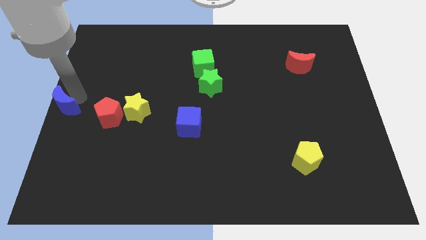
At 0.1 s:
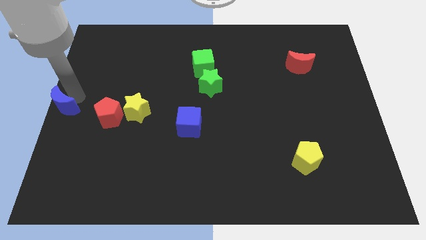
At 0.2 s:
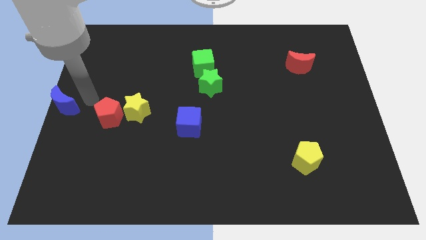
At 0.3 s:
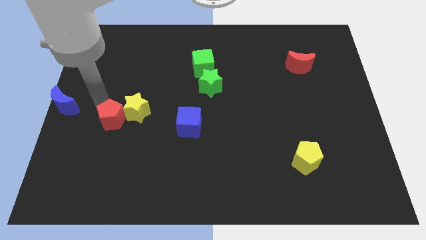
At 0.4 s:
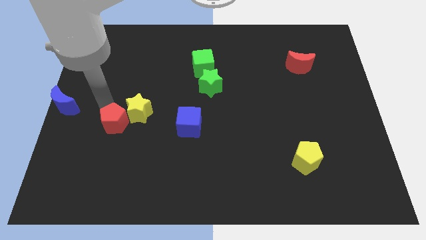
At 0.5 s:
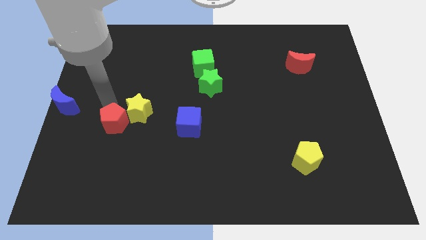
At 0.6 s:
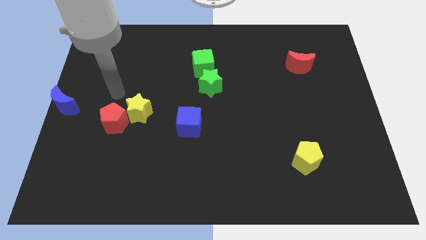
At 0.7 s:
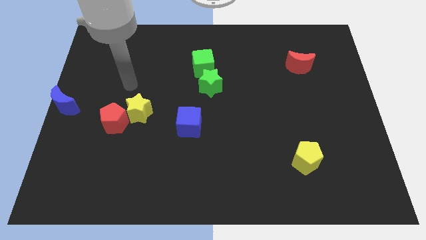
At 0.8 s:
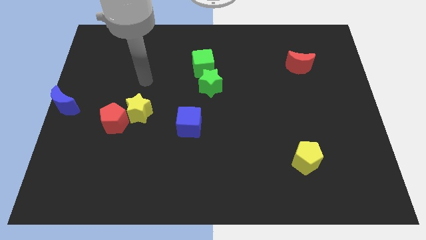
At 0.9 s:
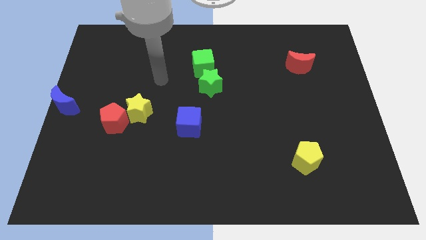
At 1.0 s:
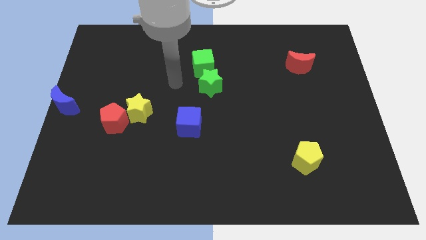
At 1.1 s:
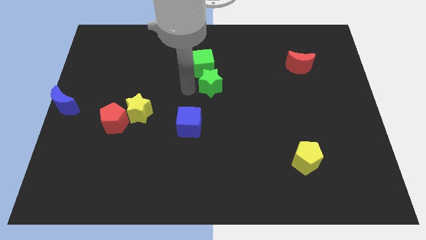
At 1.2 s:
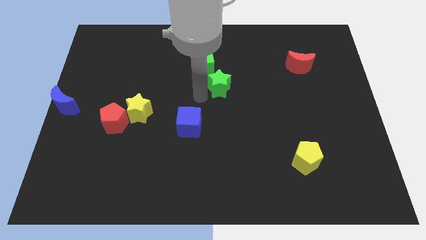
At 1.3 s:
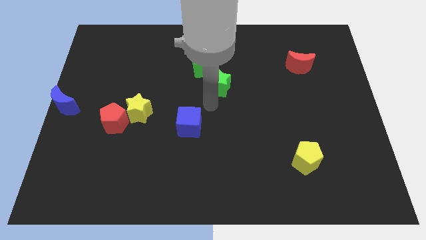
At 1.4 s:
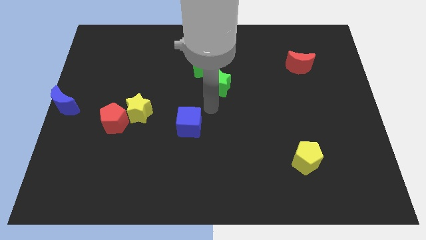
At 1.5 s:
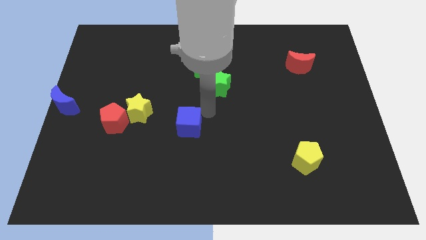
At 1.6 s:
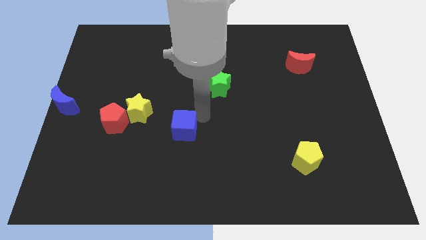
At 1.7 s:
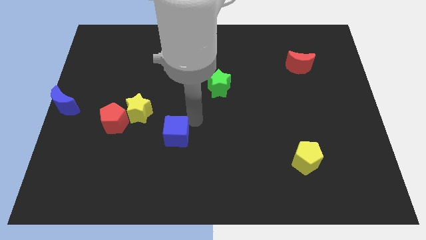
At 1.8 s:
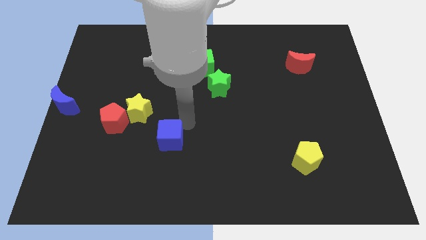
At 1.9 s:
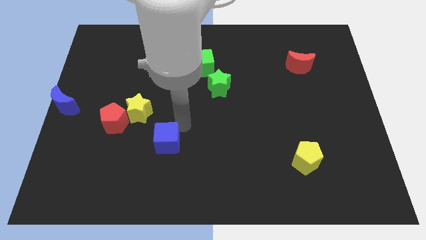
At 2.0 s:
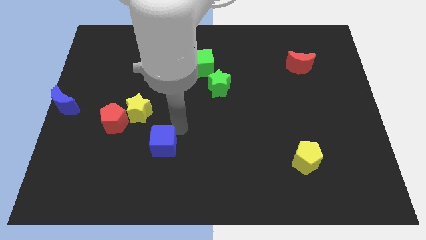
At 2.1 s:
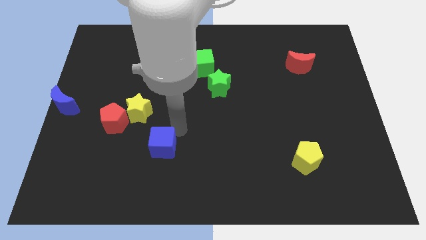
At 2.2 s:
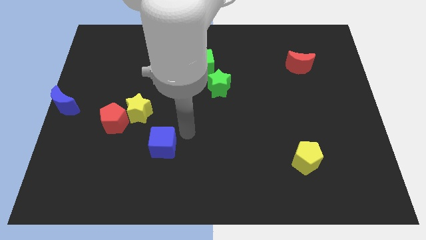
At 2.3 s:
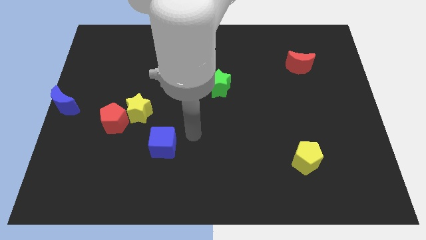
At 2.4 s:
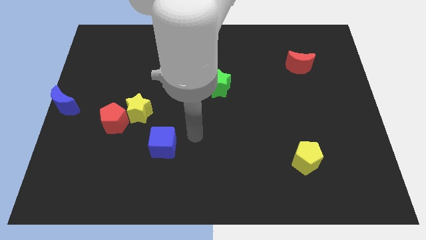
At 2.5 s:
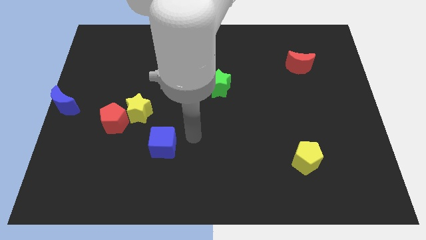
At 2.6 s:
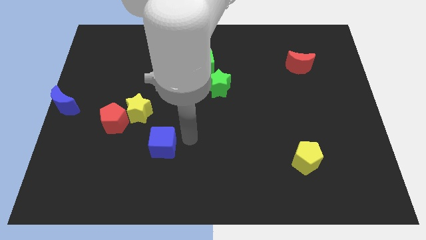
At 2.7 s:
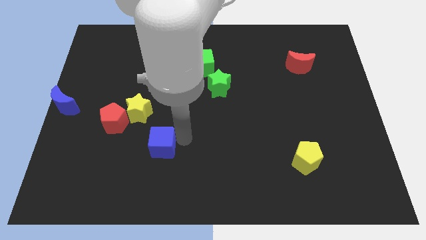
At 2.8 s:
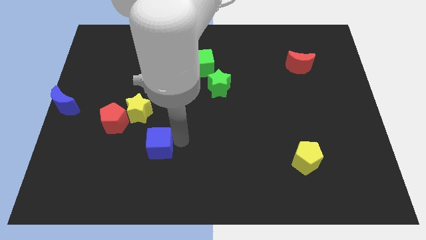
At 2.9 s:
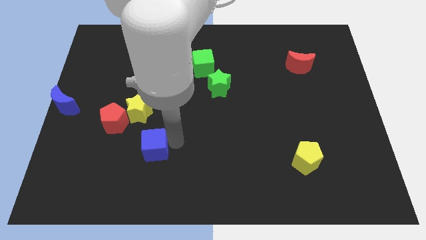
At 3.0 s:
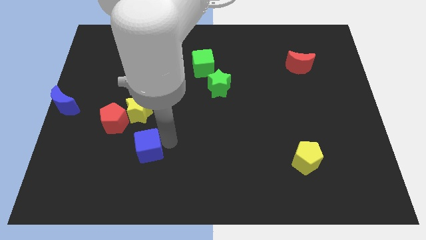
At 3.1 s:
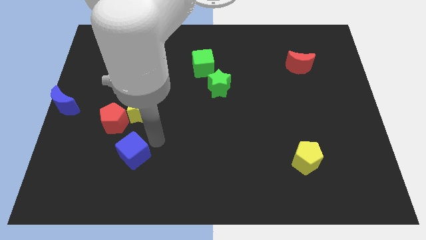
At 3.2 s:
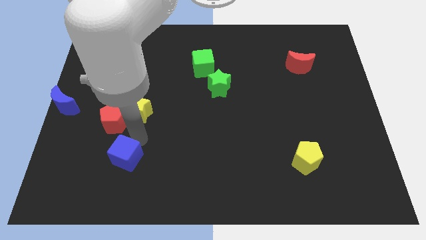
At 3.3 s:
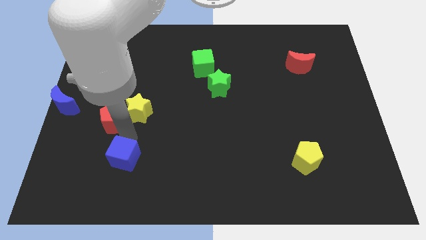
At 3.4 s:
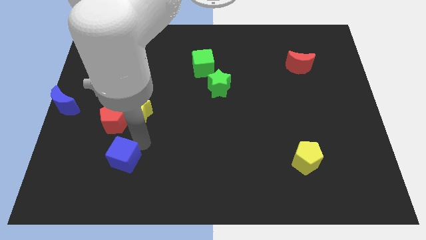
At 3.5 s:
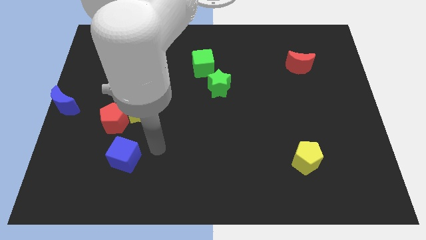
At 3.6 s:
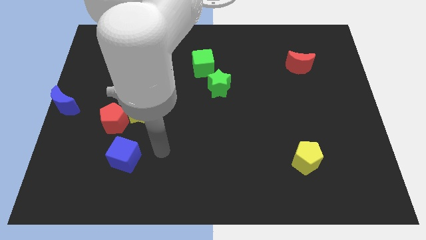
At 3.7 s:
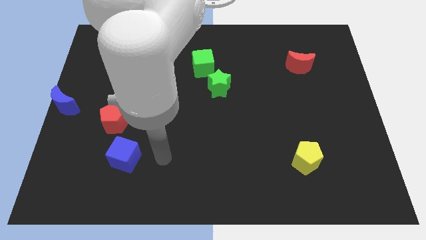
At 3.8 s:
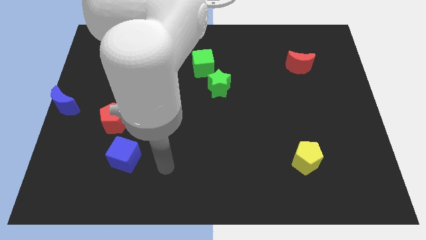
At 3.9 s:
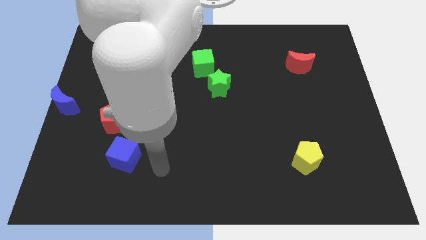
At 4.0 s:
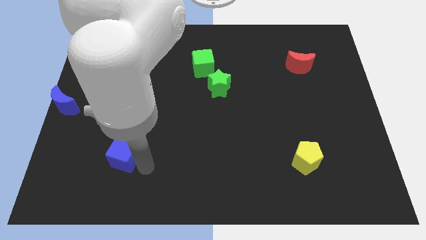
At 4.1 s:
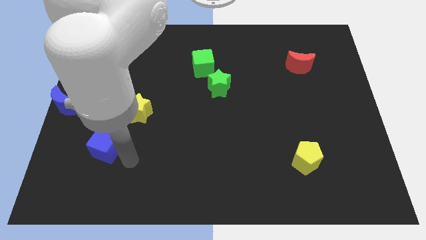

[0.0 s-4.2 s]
move the blue cube to the bottom of the red pentagon

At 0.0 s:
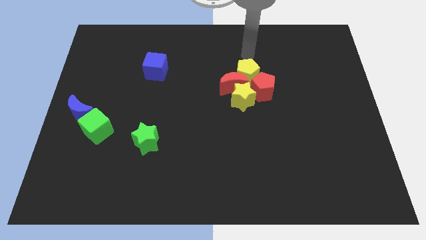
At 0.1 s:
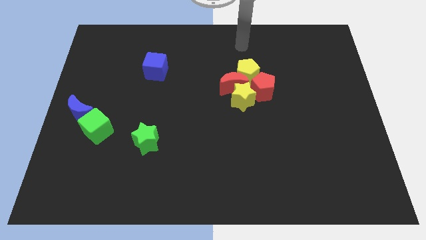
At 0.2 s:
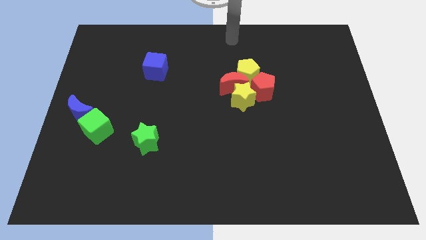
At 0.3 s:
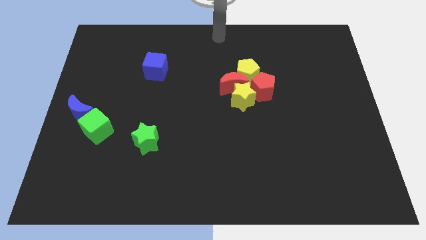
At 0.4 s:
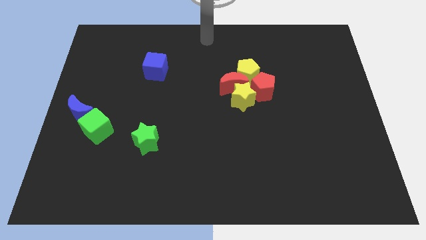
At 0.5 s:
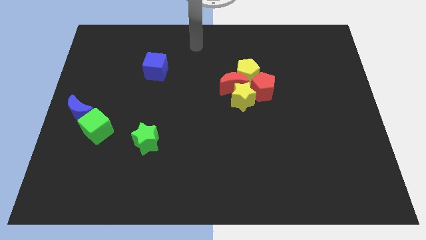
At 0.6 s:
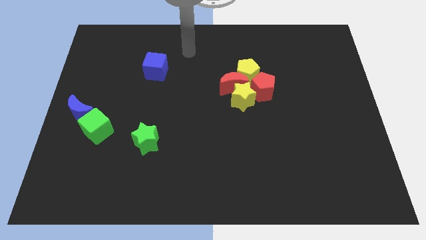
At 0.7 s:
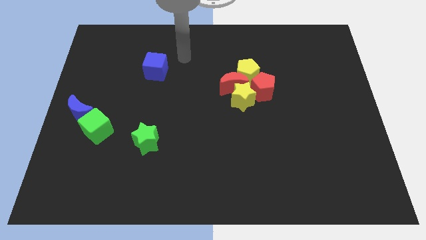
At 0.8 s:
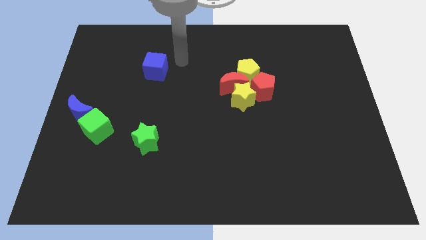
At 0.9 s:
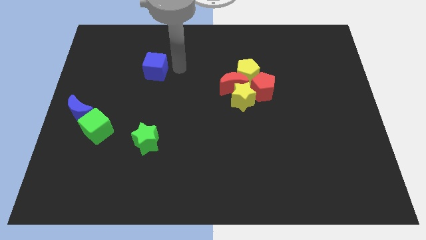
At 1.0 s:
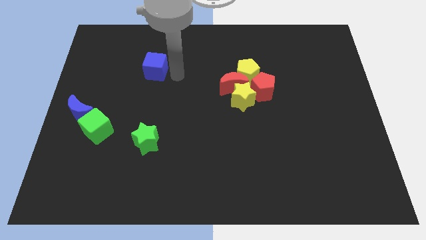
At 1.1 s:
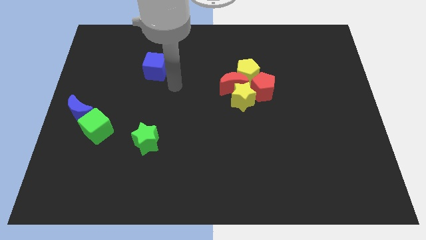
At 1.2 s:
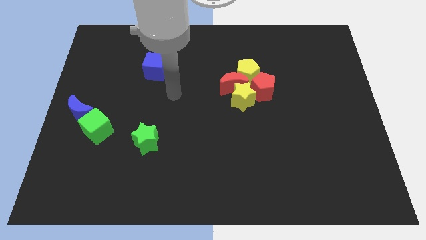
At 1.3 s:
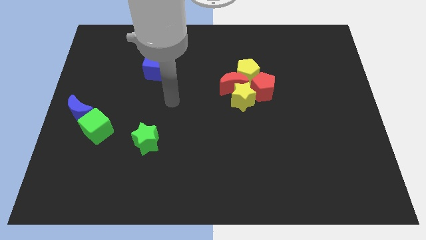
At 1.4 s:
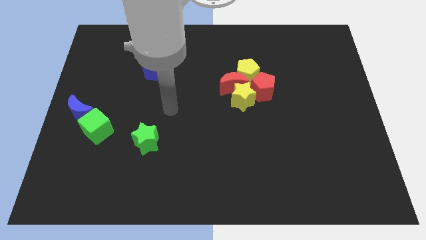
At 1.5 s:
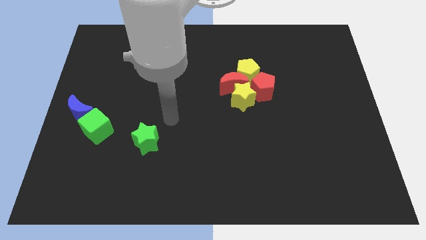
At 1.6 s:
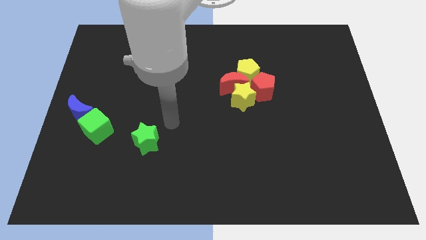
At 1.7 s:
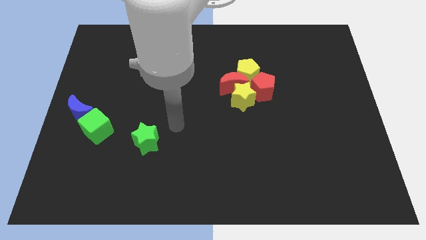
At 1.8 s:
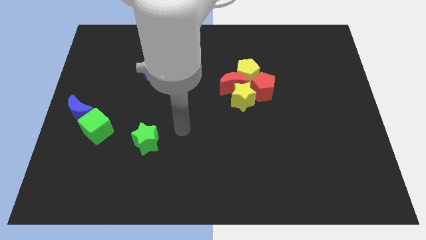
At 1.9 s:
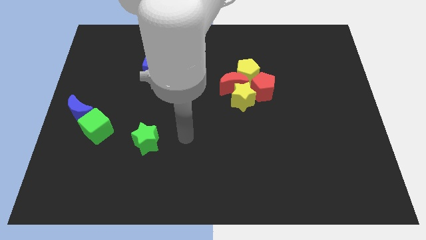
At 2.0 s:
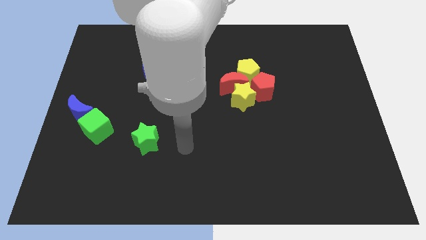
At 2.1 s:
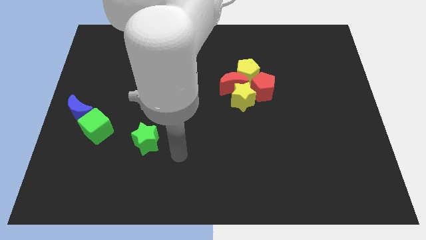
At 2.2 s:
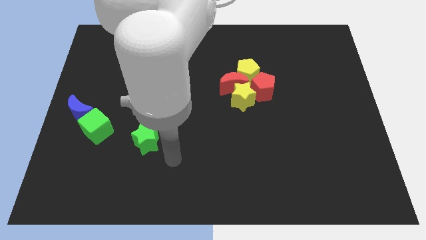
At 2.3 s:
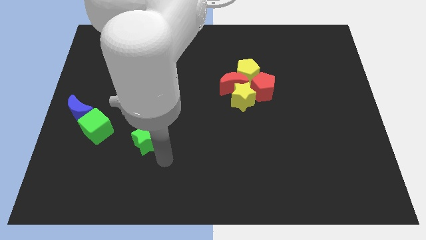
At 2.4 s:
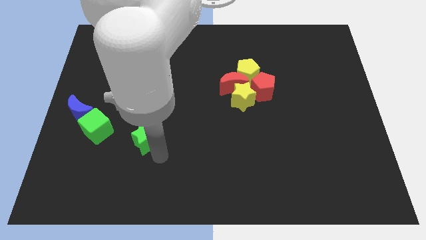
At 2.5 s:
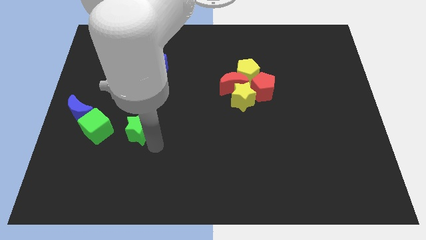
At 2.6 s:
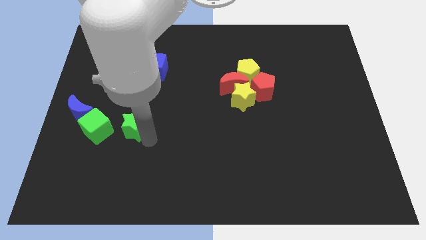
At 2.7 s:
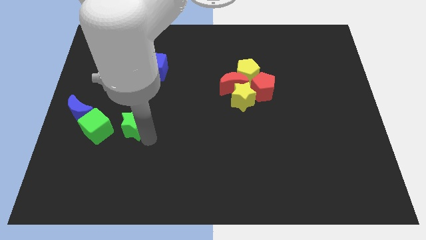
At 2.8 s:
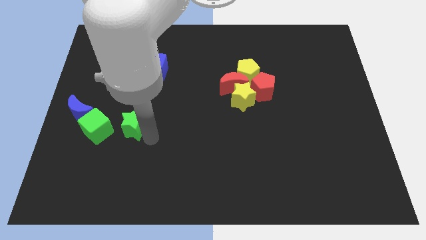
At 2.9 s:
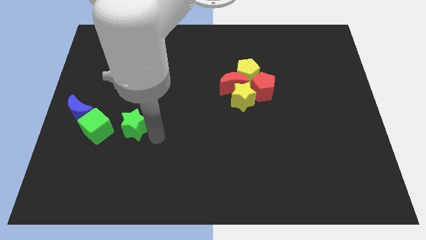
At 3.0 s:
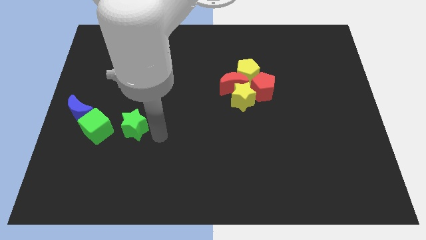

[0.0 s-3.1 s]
move the green star to the right of the green cube

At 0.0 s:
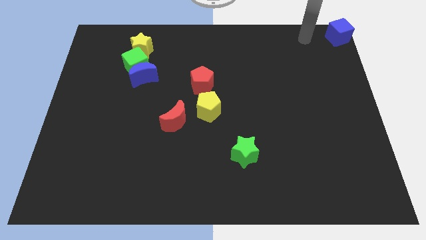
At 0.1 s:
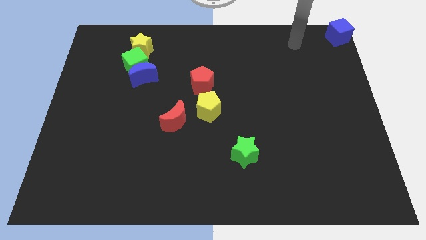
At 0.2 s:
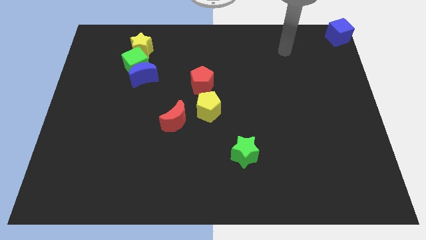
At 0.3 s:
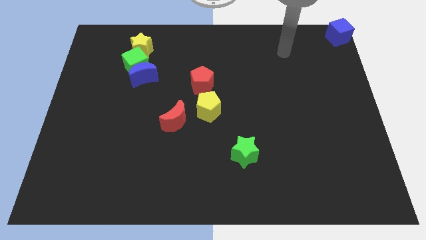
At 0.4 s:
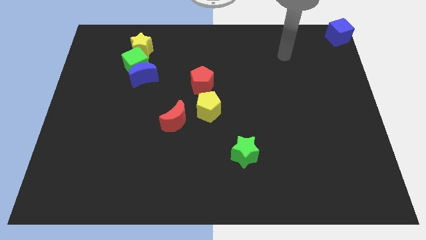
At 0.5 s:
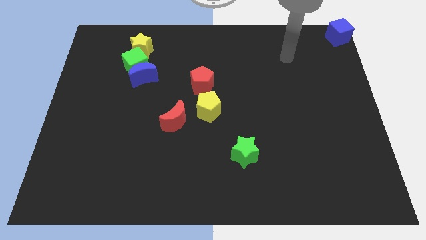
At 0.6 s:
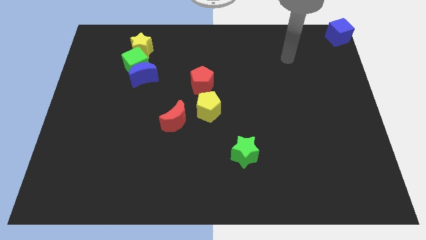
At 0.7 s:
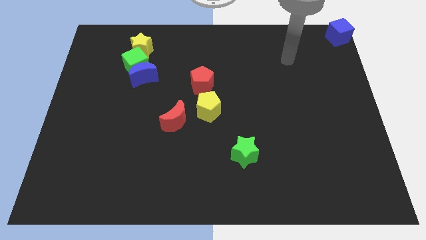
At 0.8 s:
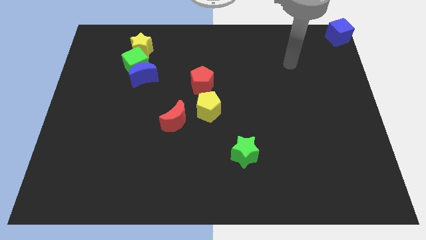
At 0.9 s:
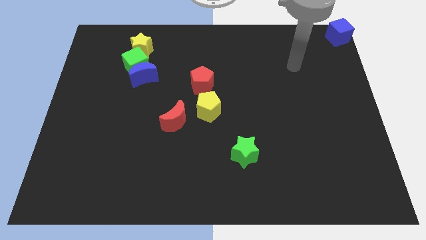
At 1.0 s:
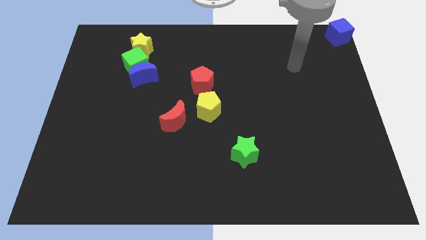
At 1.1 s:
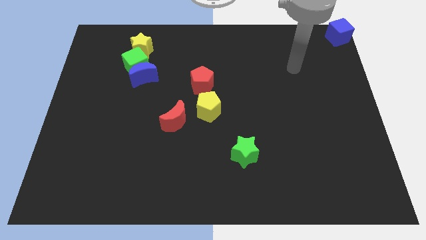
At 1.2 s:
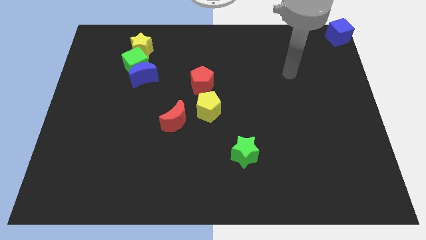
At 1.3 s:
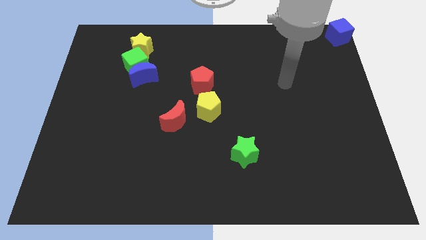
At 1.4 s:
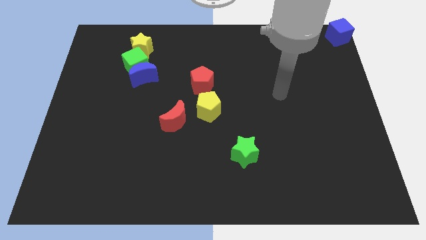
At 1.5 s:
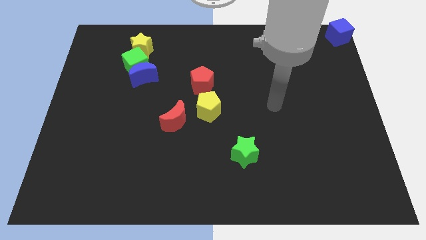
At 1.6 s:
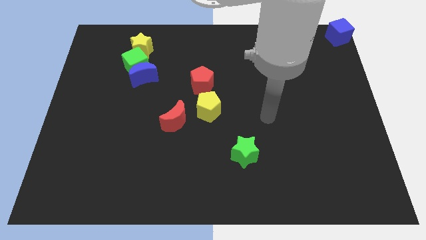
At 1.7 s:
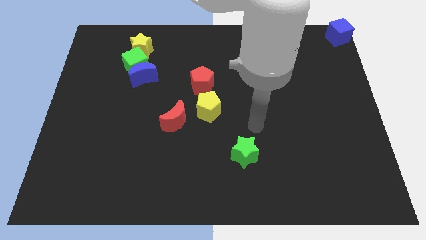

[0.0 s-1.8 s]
move your arm towards the top of the green star
